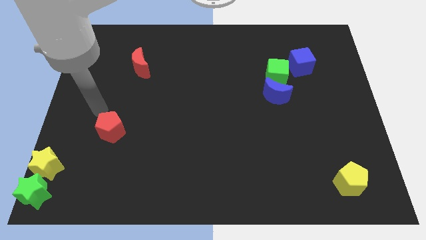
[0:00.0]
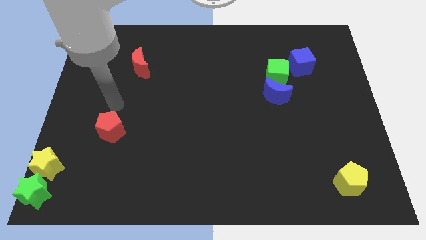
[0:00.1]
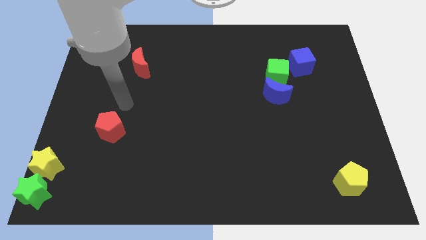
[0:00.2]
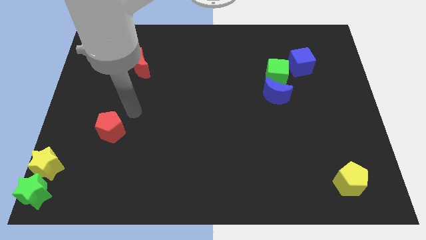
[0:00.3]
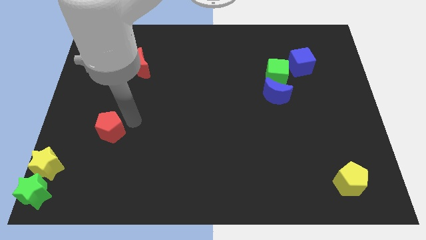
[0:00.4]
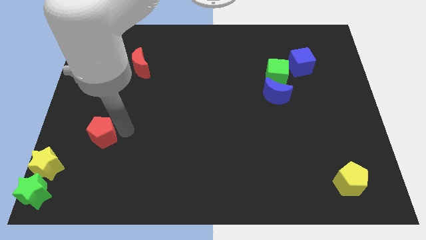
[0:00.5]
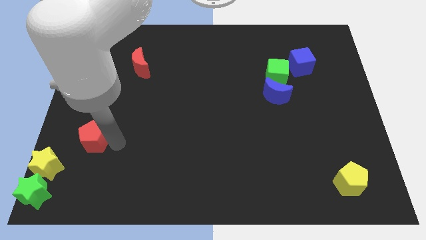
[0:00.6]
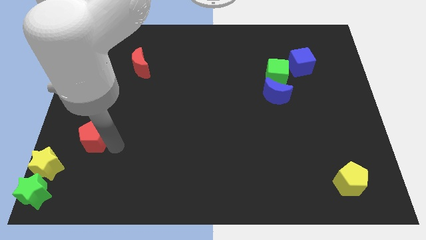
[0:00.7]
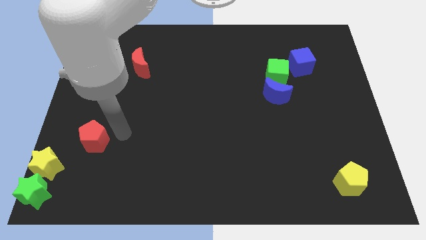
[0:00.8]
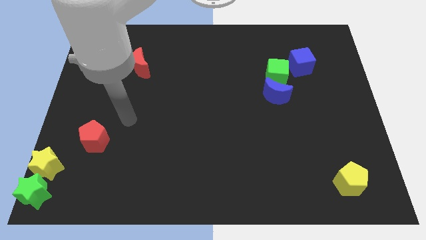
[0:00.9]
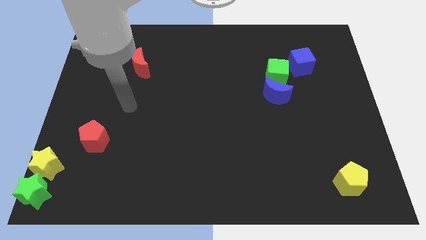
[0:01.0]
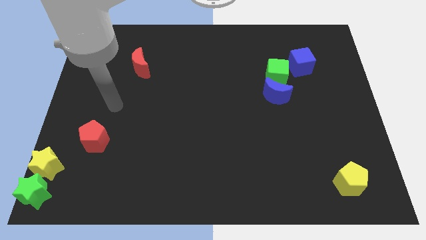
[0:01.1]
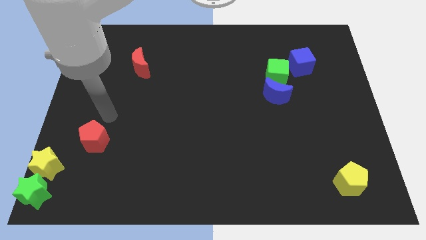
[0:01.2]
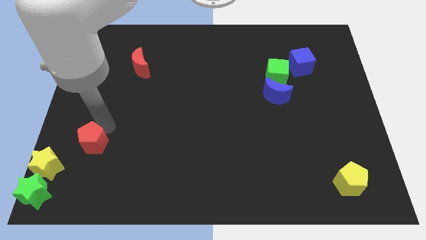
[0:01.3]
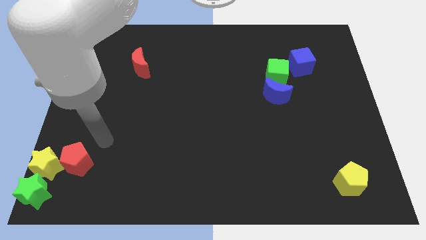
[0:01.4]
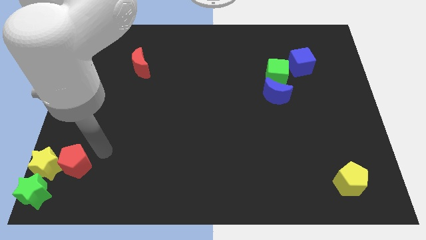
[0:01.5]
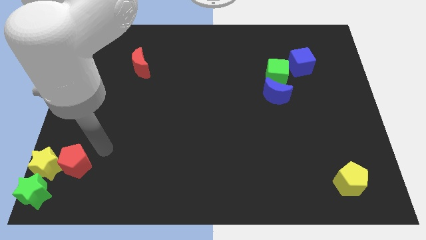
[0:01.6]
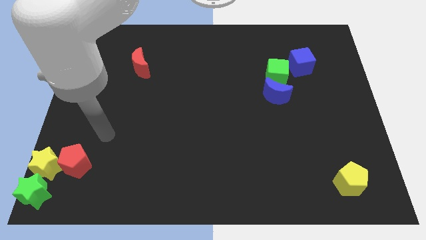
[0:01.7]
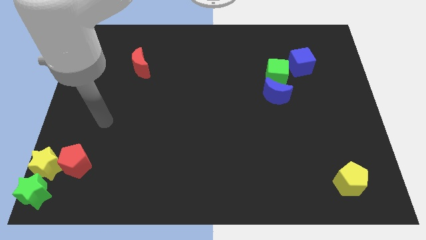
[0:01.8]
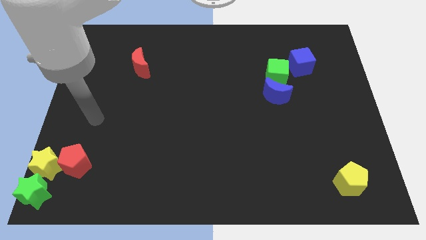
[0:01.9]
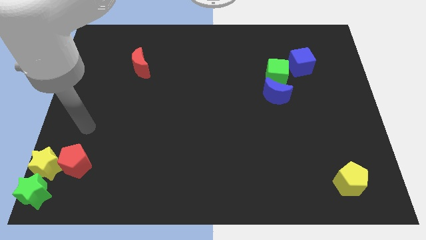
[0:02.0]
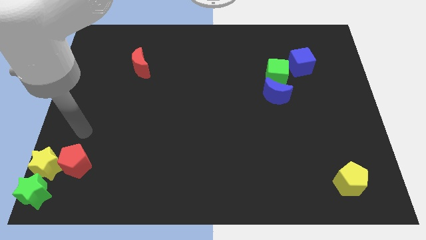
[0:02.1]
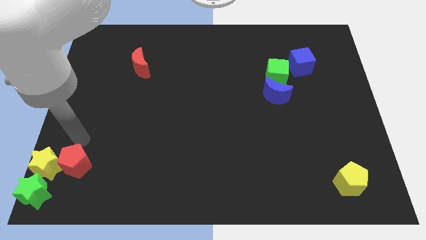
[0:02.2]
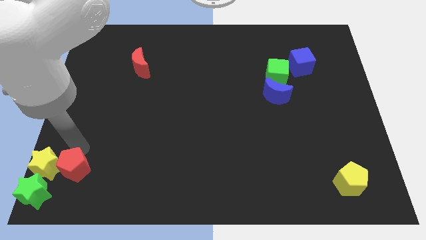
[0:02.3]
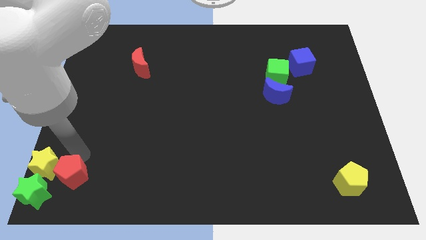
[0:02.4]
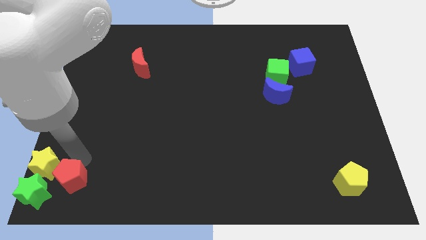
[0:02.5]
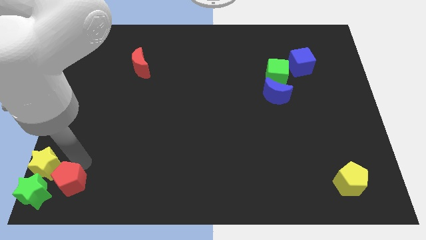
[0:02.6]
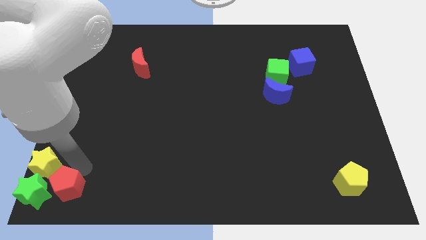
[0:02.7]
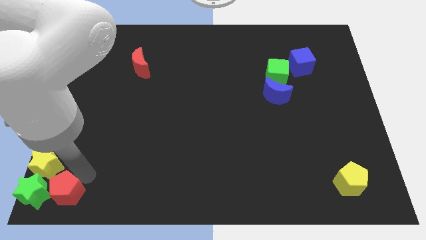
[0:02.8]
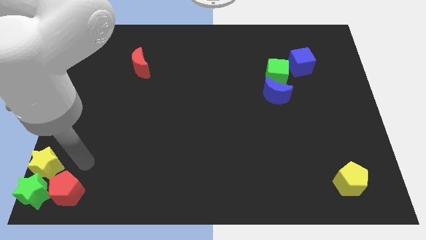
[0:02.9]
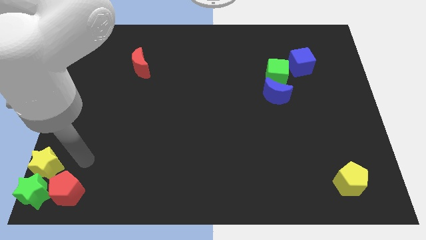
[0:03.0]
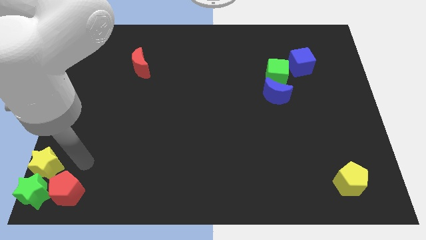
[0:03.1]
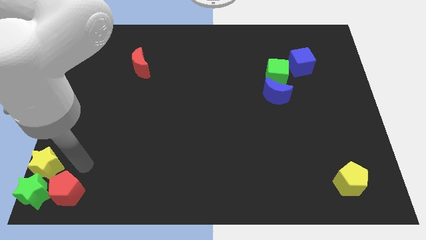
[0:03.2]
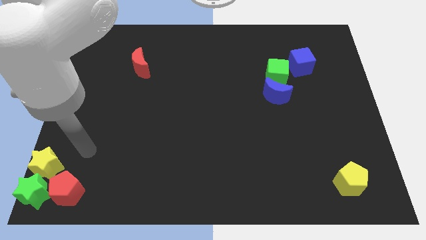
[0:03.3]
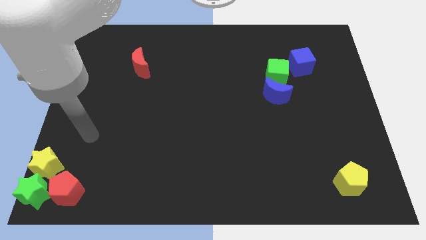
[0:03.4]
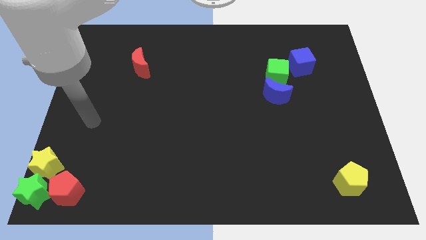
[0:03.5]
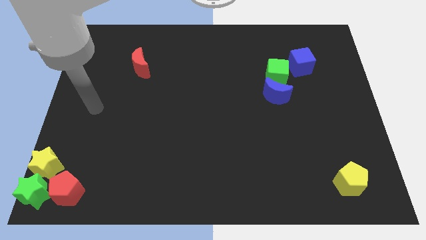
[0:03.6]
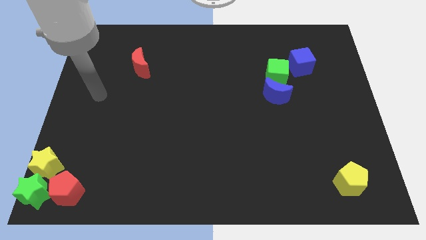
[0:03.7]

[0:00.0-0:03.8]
place the red pentagon at the bottom left corner

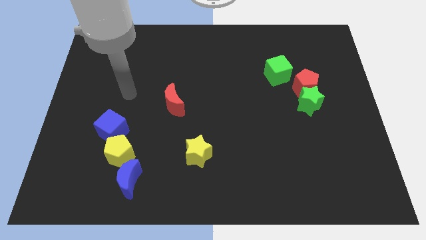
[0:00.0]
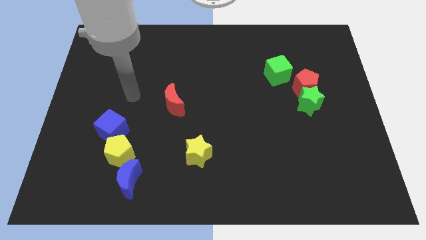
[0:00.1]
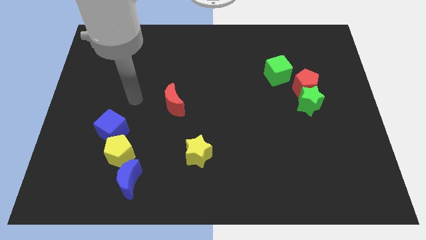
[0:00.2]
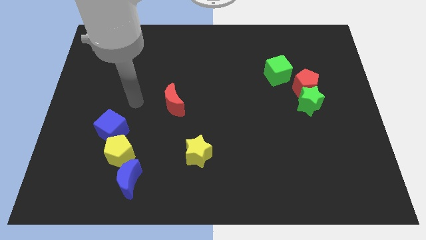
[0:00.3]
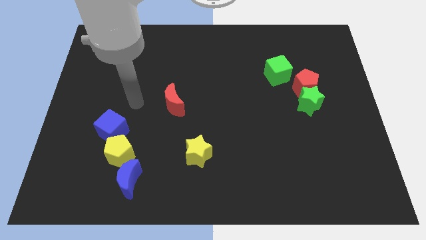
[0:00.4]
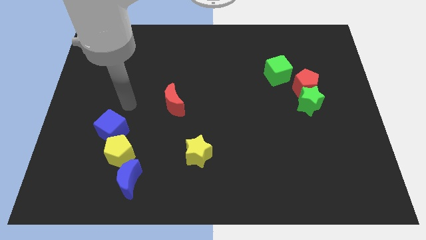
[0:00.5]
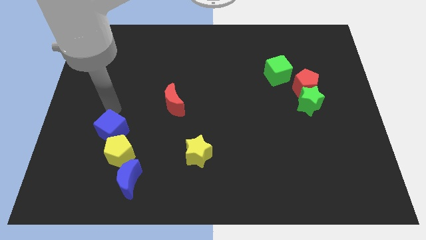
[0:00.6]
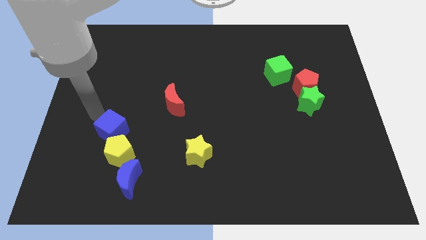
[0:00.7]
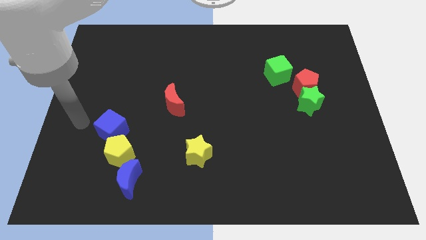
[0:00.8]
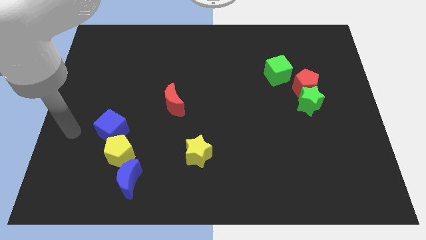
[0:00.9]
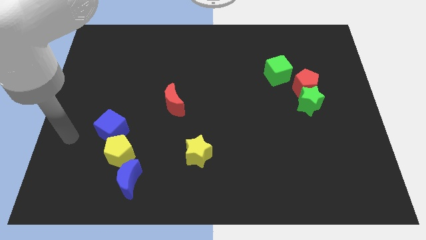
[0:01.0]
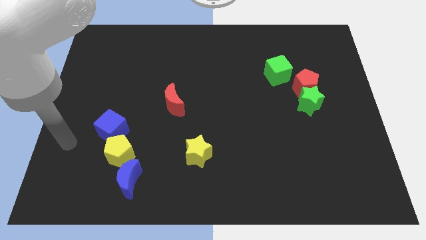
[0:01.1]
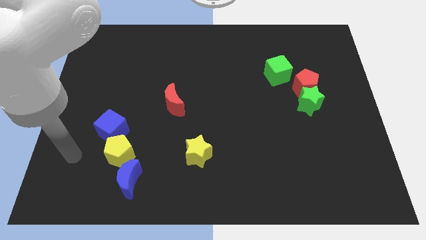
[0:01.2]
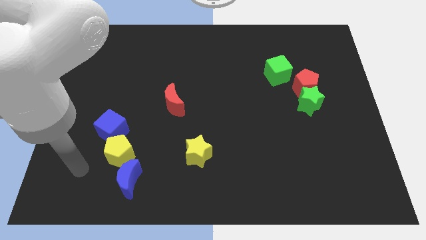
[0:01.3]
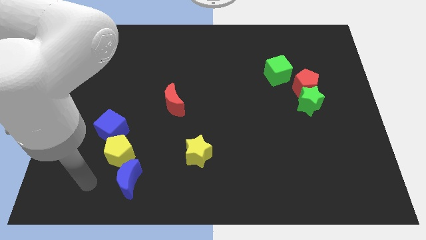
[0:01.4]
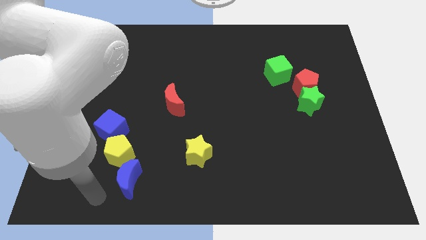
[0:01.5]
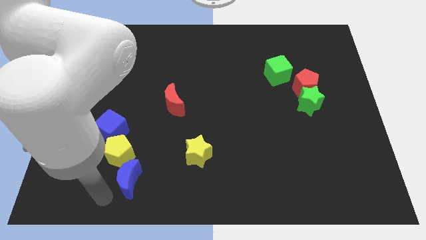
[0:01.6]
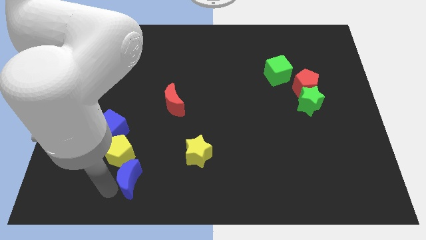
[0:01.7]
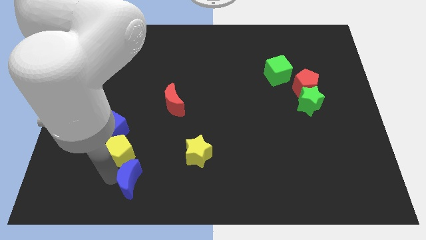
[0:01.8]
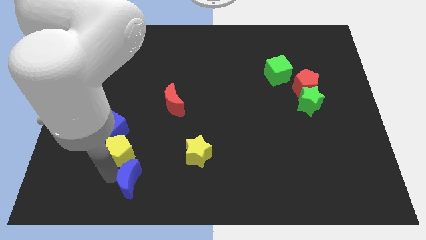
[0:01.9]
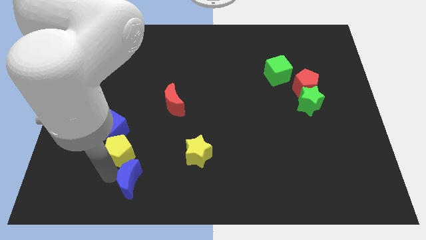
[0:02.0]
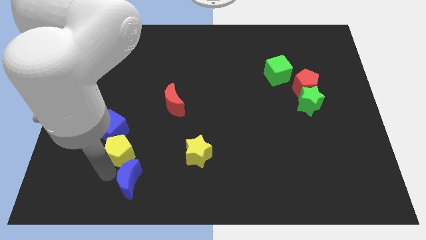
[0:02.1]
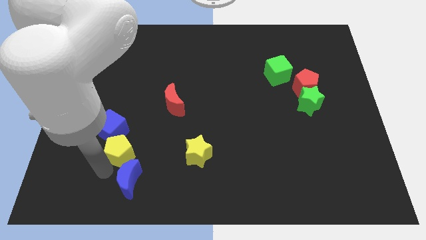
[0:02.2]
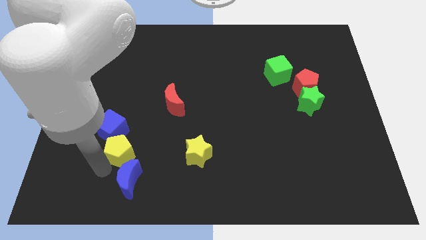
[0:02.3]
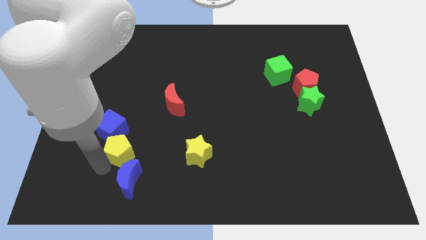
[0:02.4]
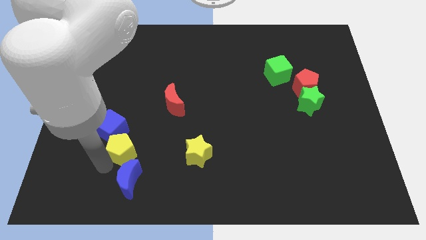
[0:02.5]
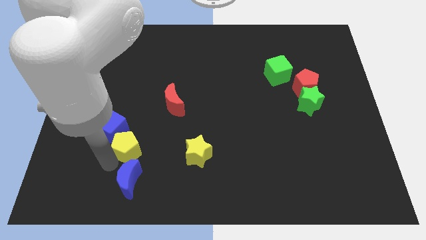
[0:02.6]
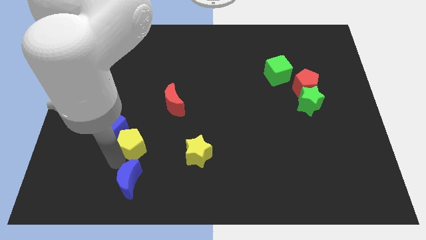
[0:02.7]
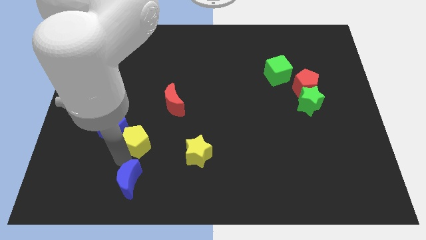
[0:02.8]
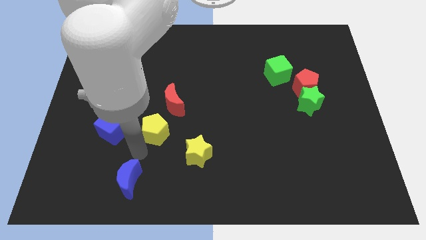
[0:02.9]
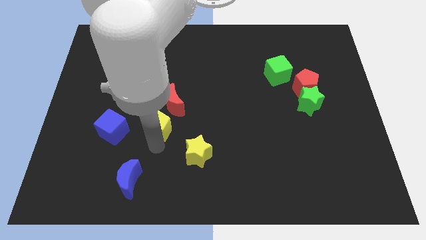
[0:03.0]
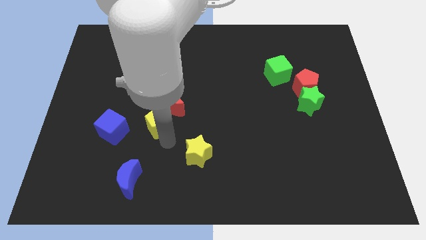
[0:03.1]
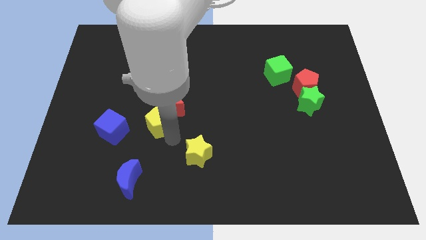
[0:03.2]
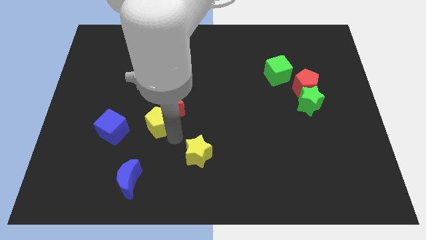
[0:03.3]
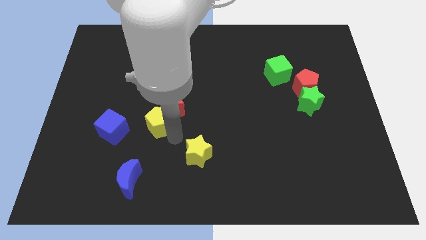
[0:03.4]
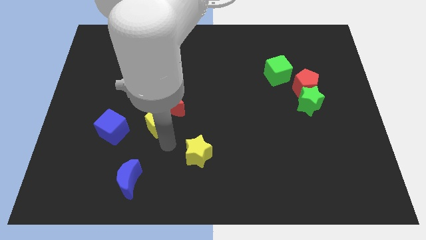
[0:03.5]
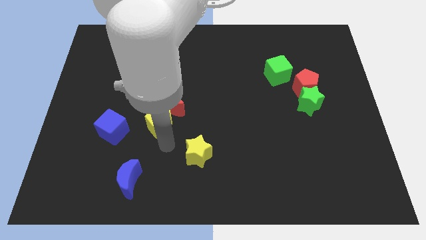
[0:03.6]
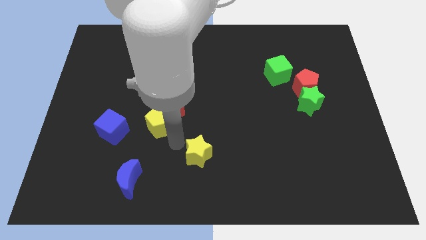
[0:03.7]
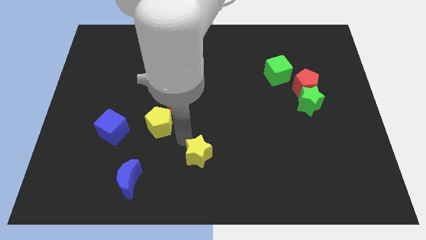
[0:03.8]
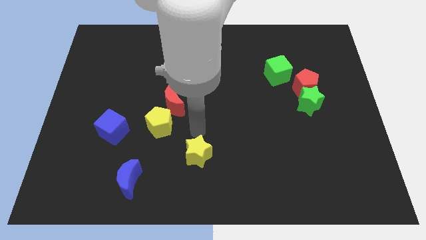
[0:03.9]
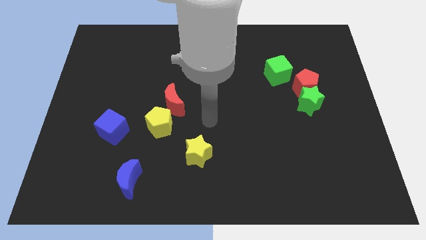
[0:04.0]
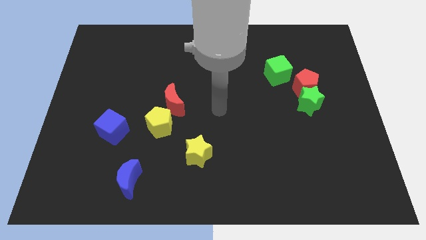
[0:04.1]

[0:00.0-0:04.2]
push the yellow pentagon into the red crescent

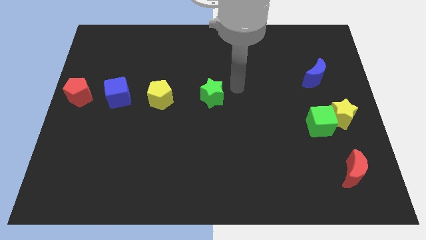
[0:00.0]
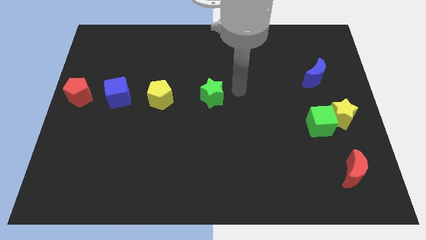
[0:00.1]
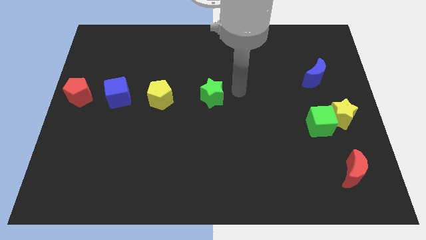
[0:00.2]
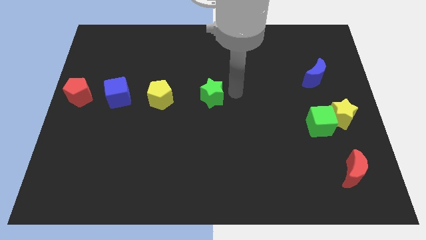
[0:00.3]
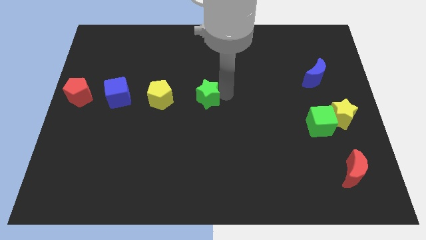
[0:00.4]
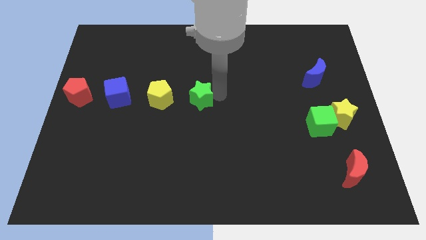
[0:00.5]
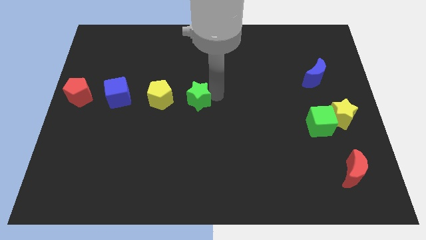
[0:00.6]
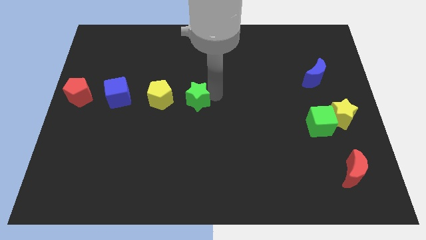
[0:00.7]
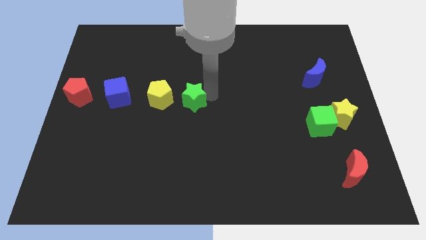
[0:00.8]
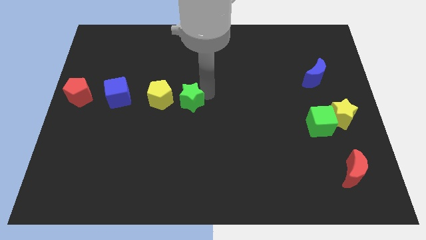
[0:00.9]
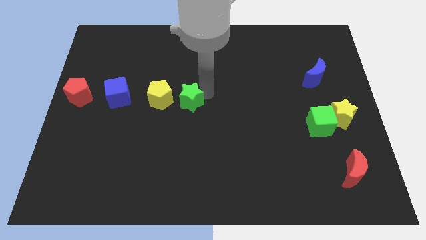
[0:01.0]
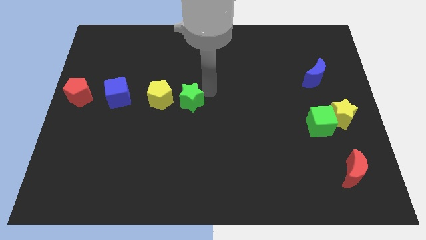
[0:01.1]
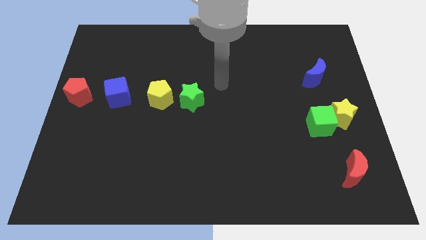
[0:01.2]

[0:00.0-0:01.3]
place the green star to the right side of the yellow pentagon
